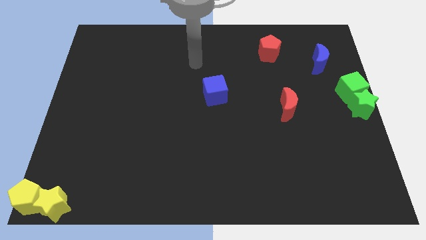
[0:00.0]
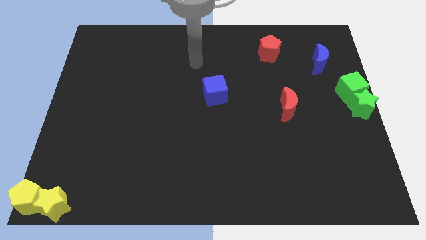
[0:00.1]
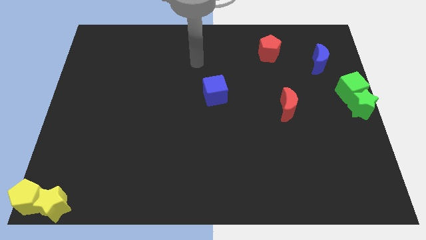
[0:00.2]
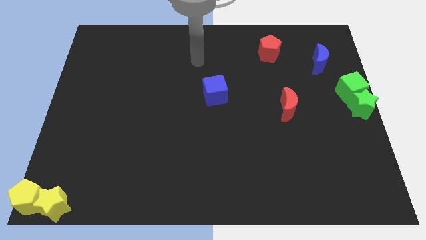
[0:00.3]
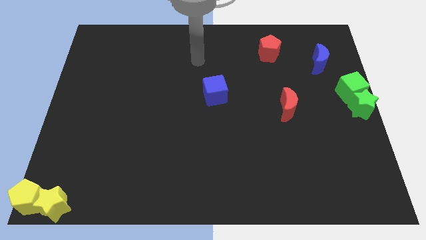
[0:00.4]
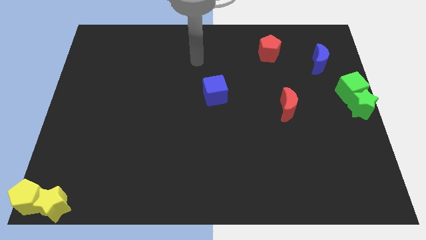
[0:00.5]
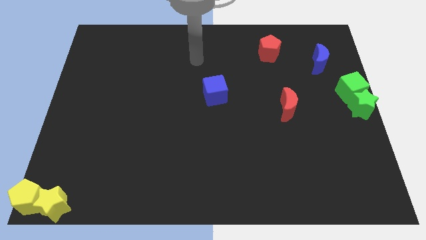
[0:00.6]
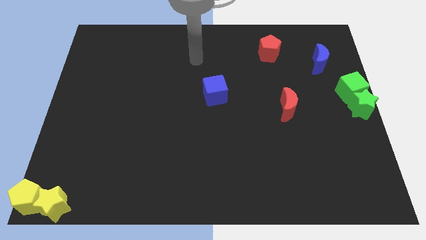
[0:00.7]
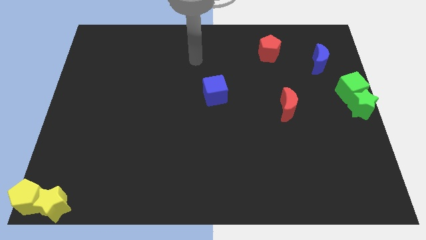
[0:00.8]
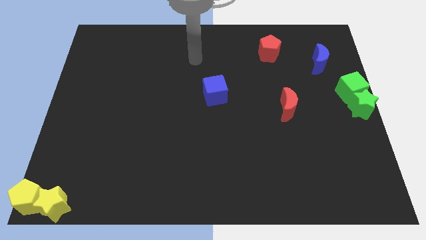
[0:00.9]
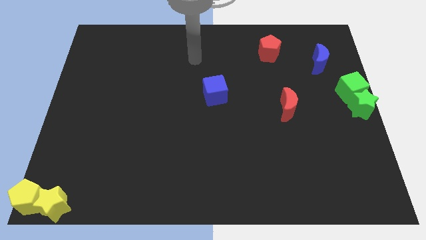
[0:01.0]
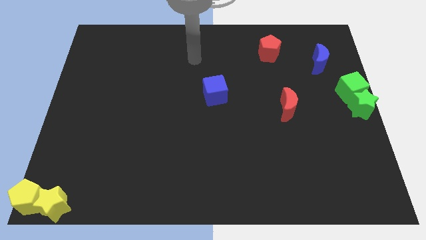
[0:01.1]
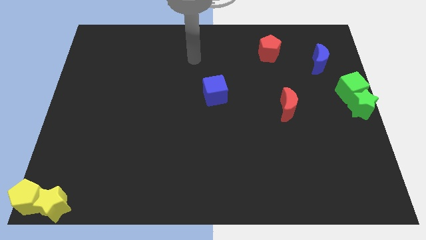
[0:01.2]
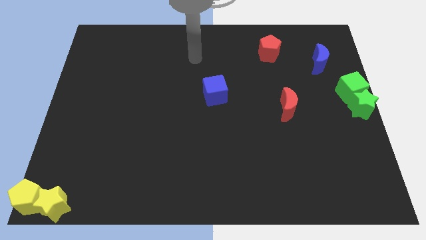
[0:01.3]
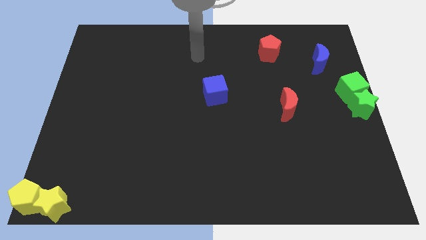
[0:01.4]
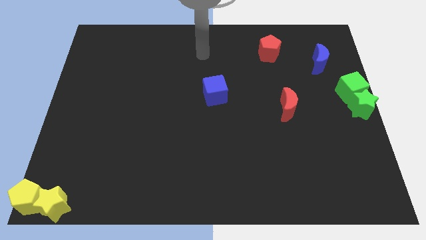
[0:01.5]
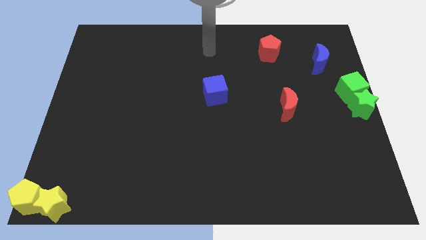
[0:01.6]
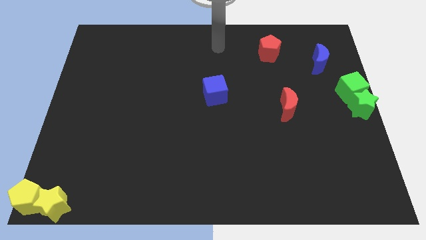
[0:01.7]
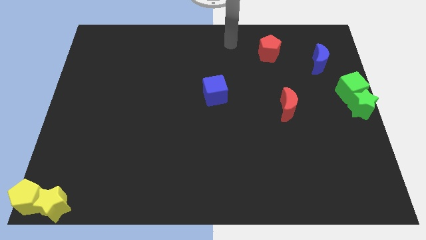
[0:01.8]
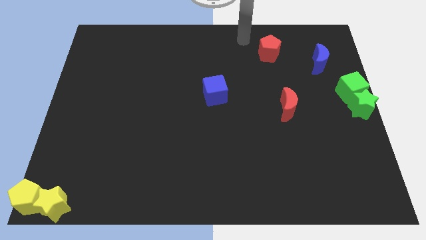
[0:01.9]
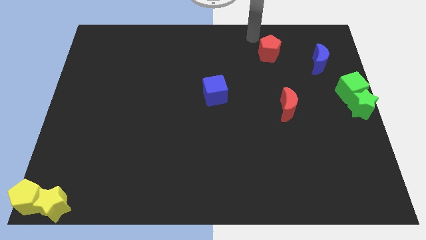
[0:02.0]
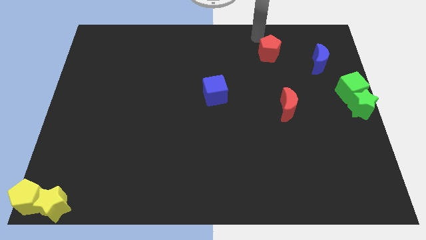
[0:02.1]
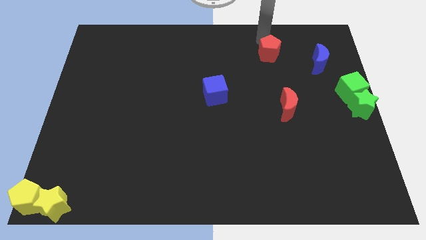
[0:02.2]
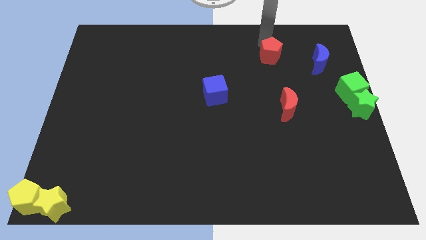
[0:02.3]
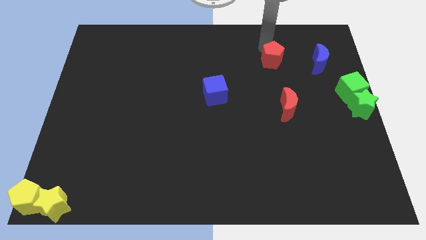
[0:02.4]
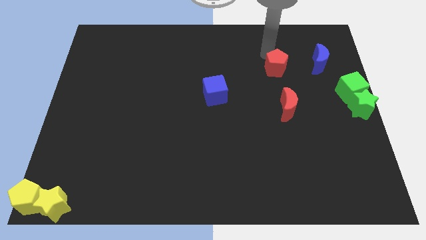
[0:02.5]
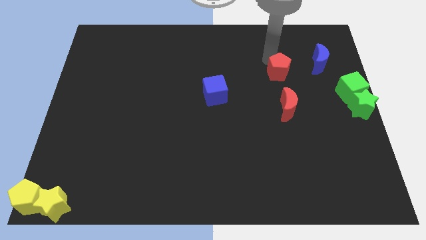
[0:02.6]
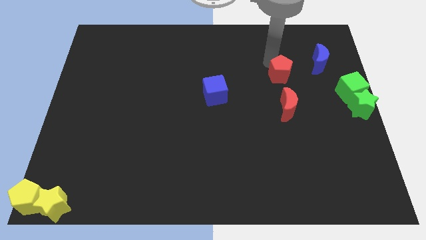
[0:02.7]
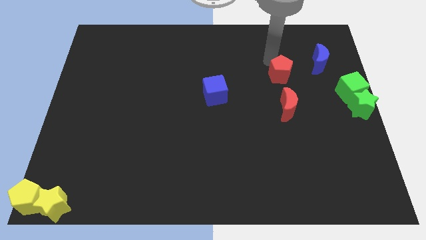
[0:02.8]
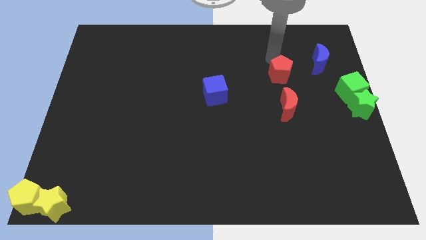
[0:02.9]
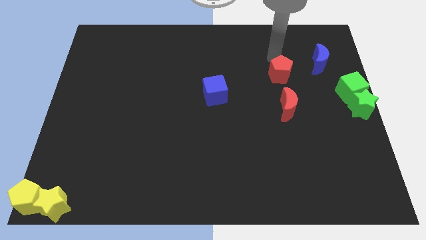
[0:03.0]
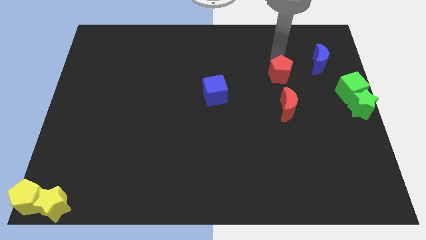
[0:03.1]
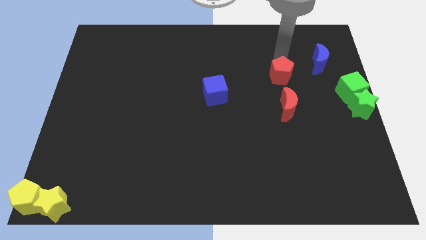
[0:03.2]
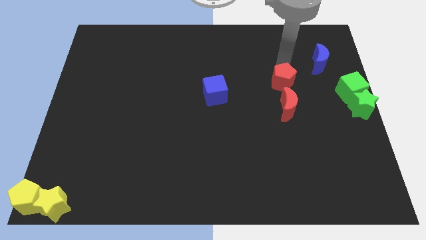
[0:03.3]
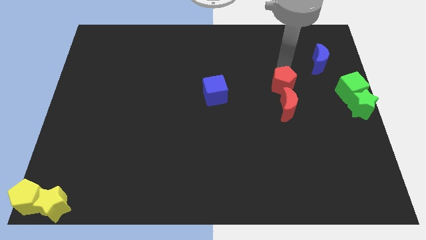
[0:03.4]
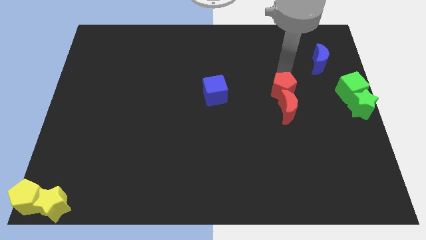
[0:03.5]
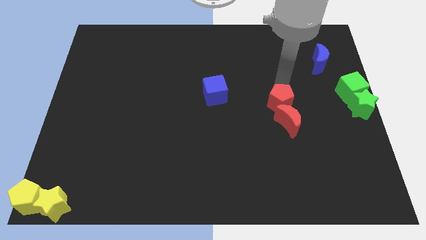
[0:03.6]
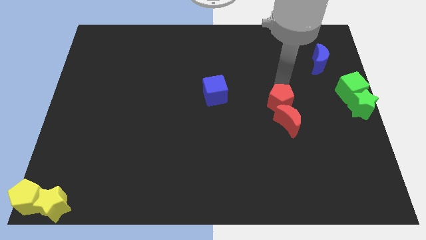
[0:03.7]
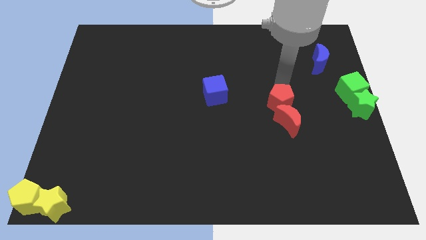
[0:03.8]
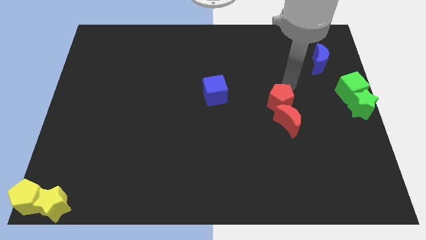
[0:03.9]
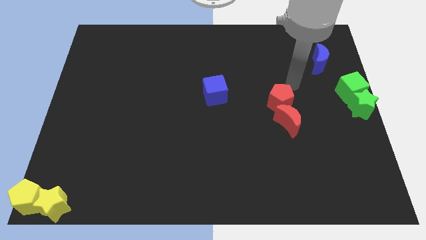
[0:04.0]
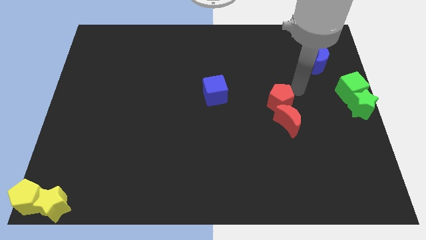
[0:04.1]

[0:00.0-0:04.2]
push the red pentagon into the red crescent

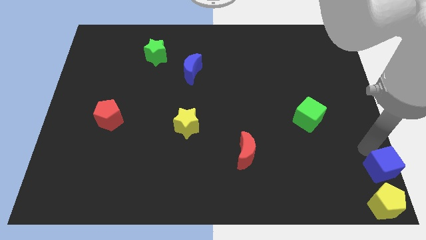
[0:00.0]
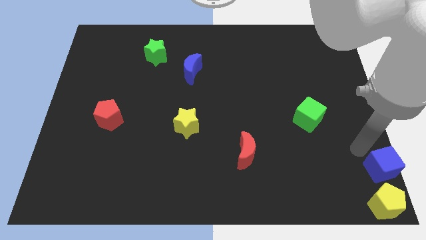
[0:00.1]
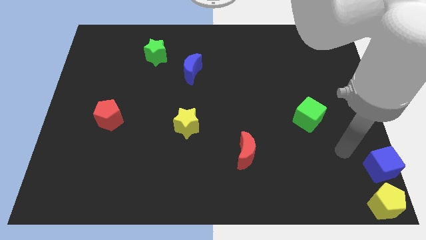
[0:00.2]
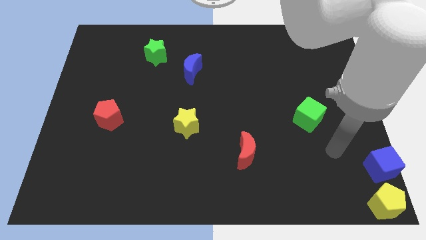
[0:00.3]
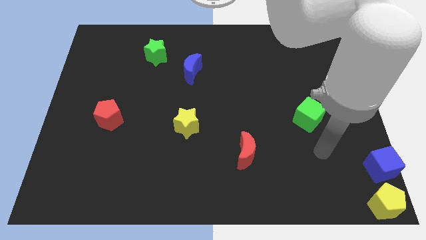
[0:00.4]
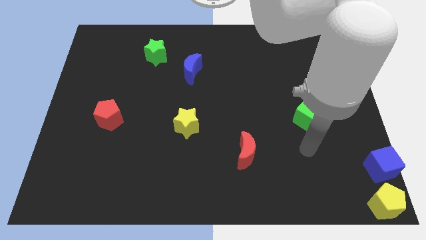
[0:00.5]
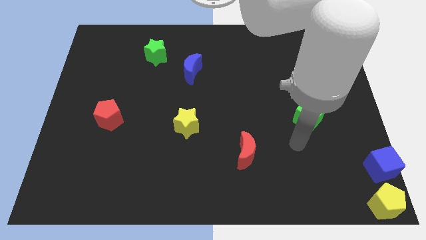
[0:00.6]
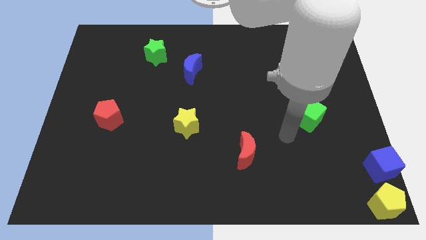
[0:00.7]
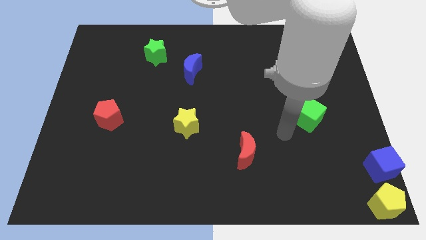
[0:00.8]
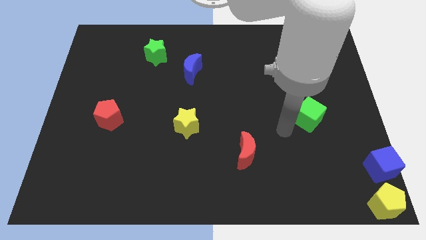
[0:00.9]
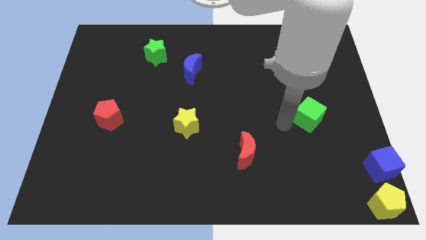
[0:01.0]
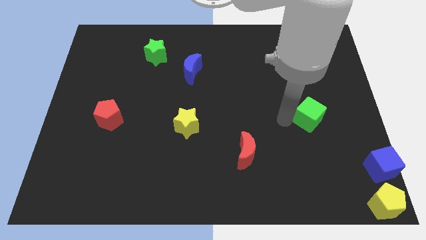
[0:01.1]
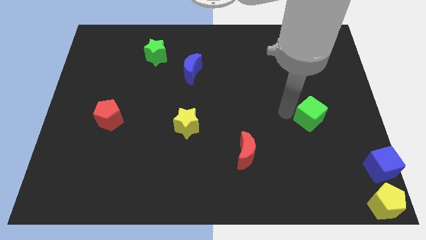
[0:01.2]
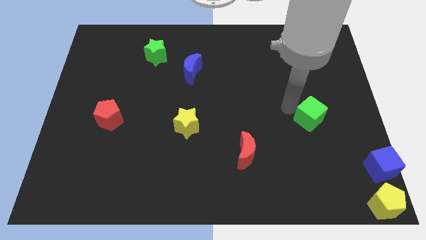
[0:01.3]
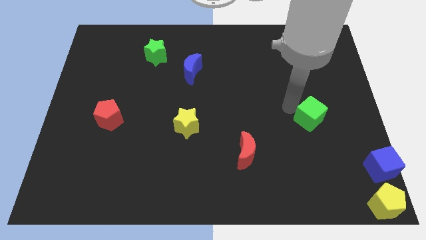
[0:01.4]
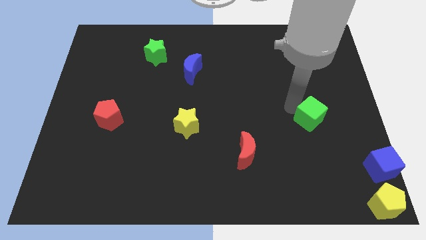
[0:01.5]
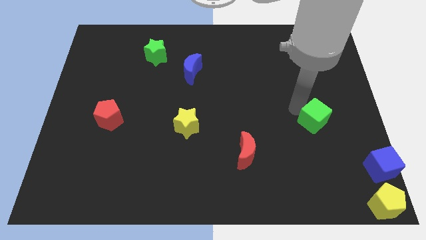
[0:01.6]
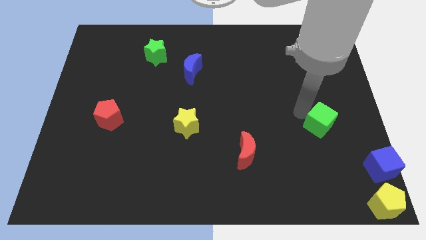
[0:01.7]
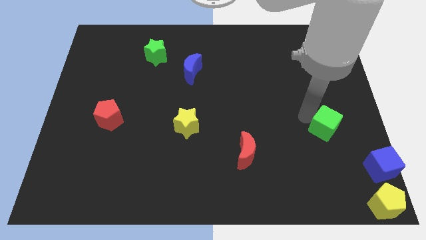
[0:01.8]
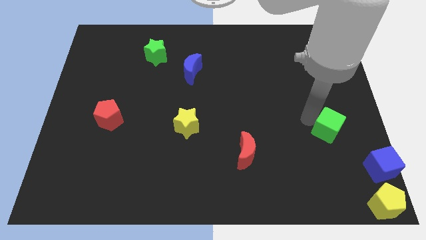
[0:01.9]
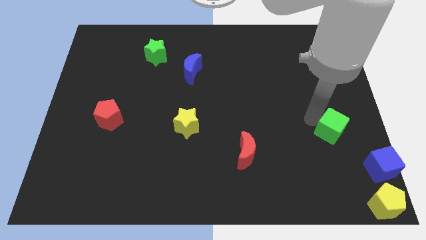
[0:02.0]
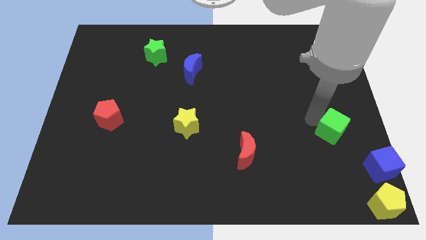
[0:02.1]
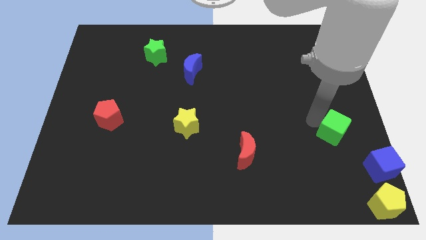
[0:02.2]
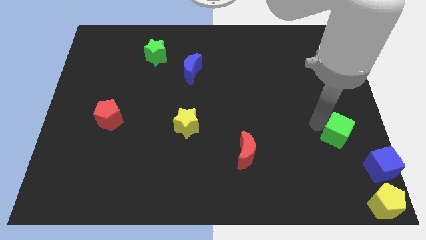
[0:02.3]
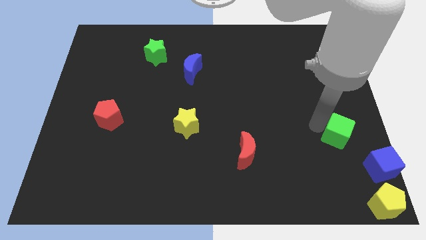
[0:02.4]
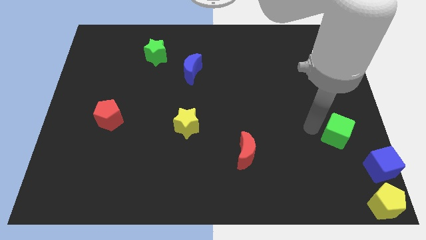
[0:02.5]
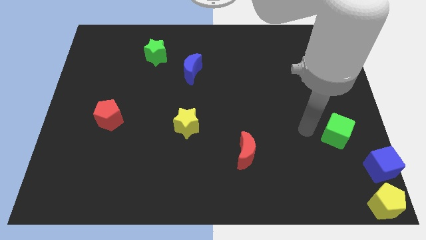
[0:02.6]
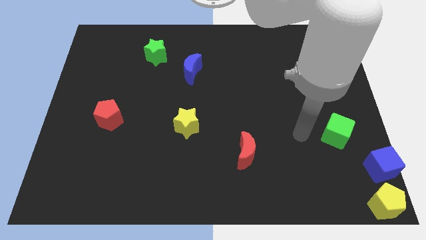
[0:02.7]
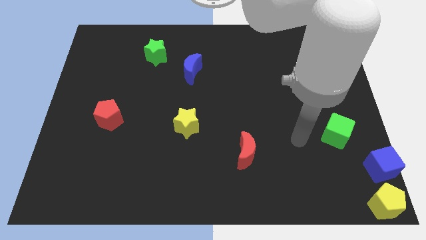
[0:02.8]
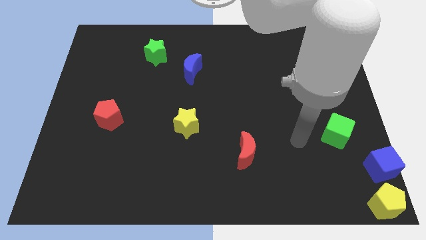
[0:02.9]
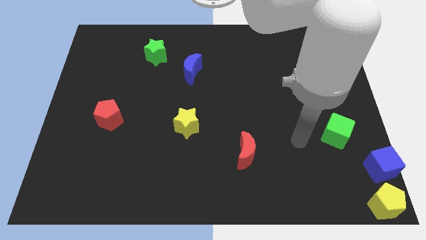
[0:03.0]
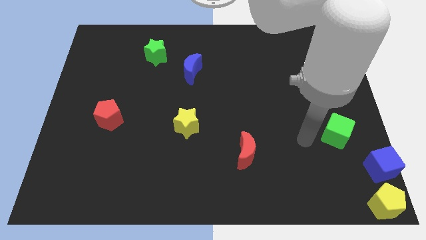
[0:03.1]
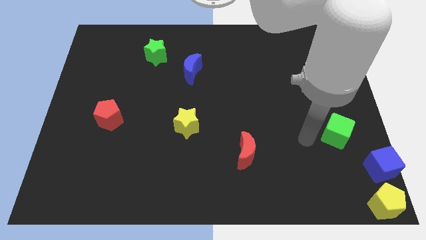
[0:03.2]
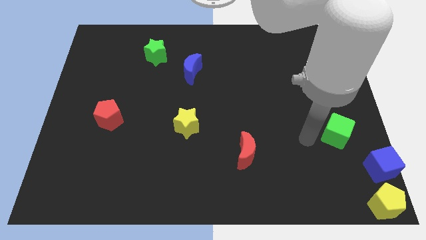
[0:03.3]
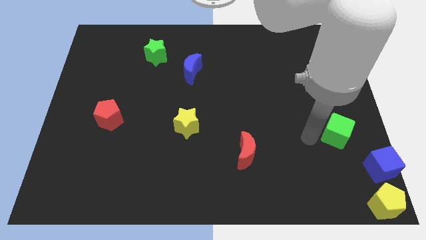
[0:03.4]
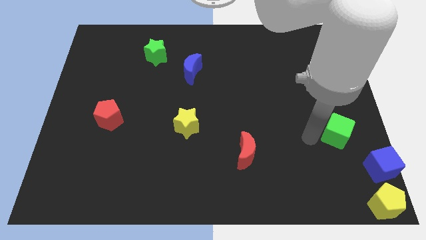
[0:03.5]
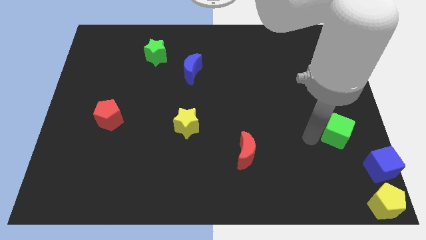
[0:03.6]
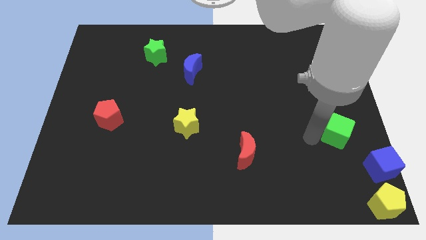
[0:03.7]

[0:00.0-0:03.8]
push the green cube towards the blue cube

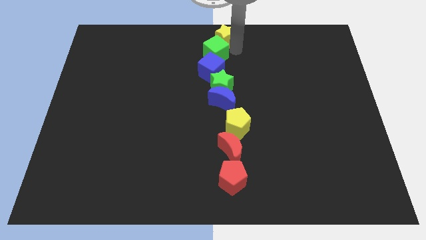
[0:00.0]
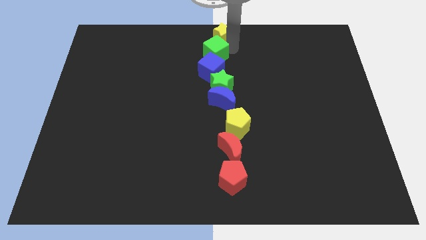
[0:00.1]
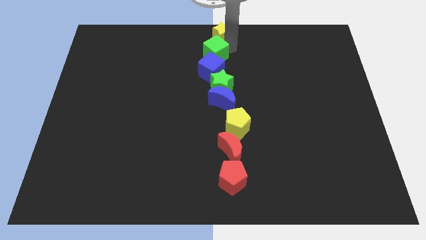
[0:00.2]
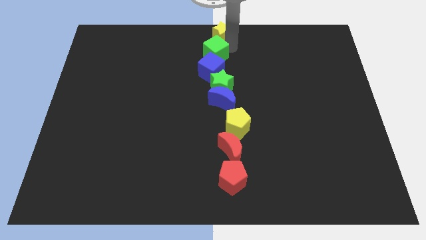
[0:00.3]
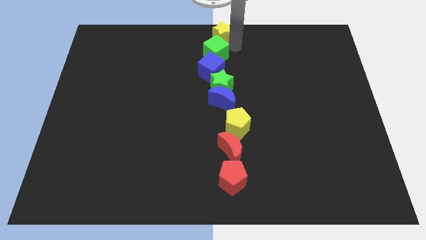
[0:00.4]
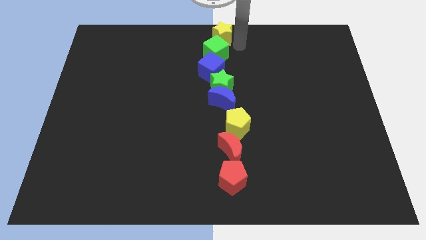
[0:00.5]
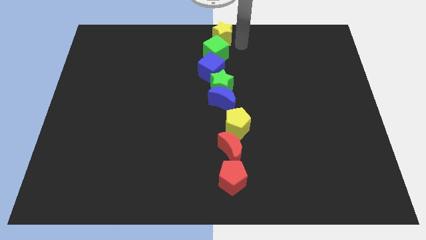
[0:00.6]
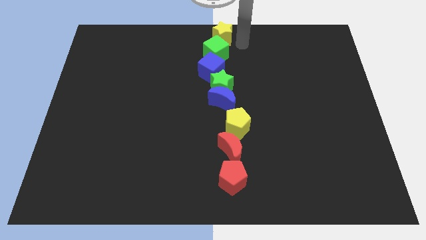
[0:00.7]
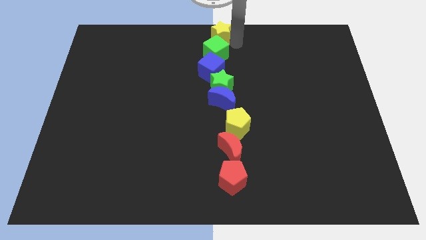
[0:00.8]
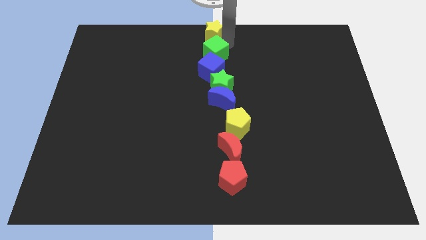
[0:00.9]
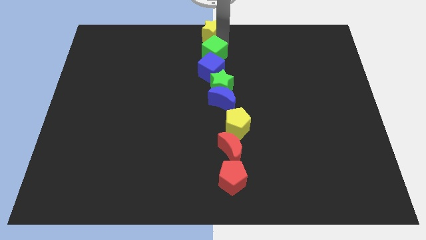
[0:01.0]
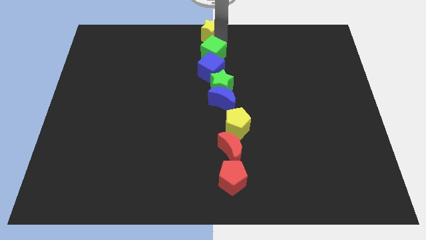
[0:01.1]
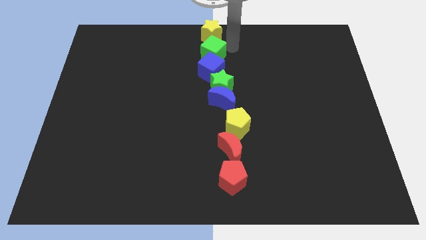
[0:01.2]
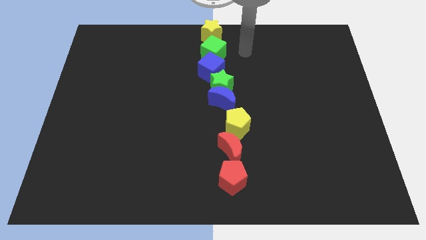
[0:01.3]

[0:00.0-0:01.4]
slide the yellow star vertically above the green cube
